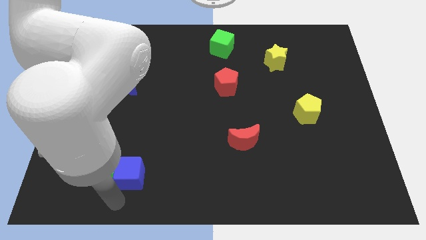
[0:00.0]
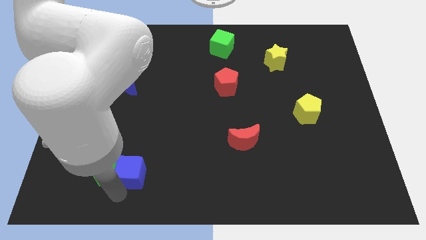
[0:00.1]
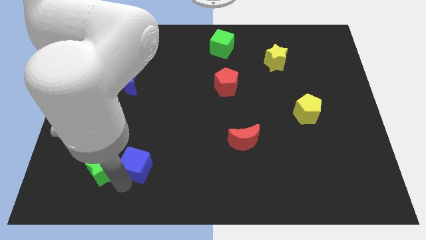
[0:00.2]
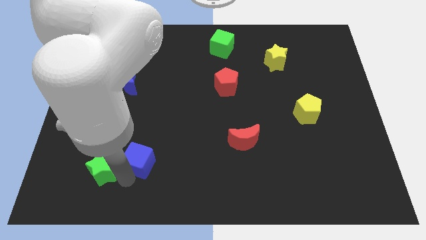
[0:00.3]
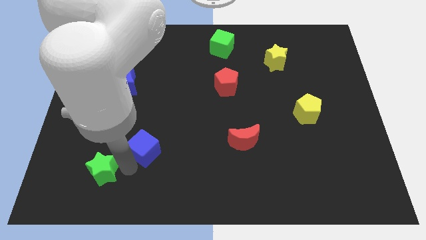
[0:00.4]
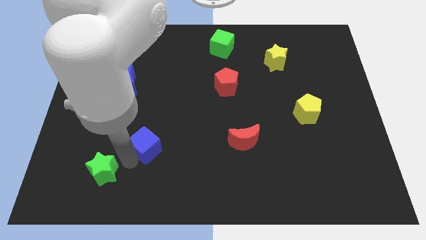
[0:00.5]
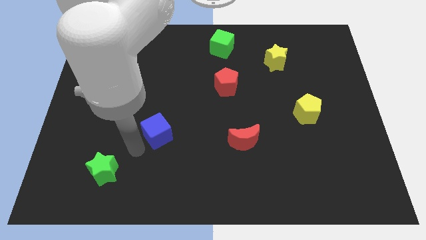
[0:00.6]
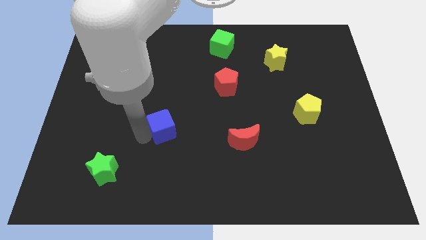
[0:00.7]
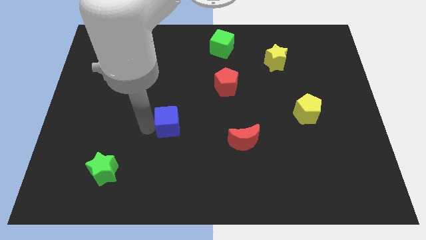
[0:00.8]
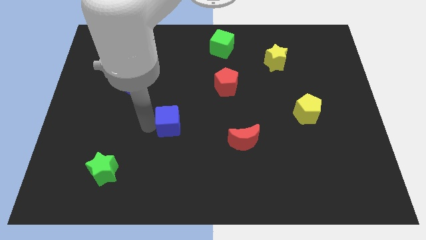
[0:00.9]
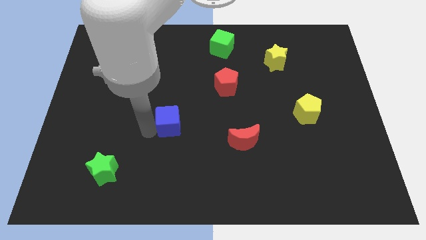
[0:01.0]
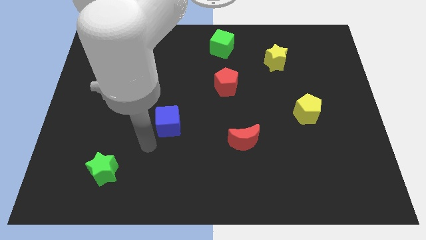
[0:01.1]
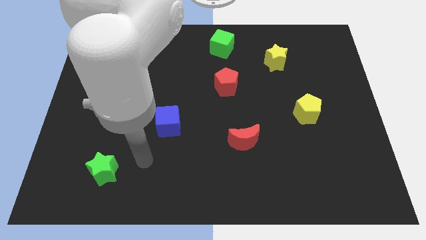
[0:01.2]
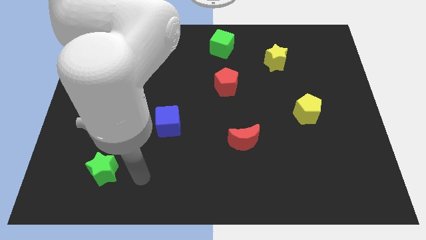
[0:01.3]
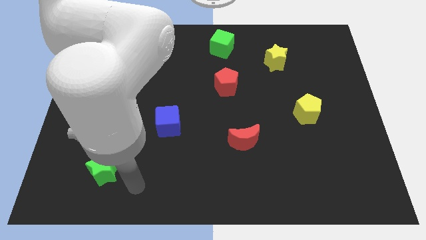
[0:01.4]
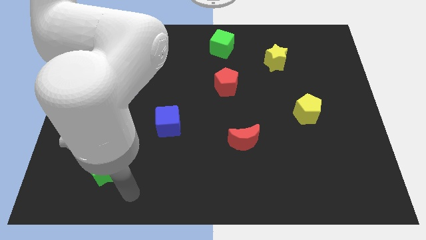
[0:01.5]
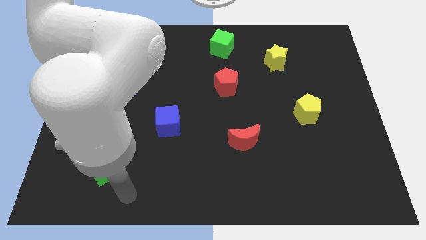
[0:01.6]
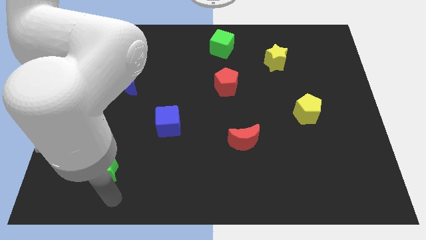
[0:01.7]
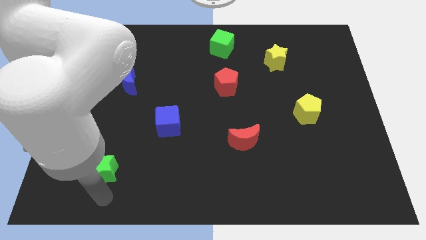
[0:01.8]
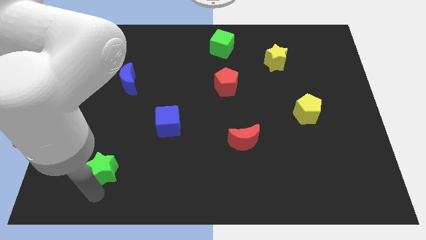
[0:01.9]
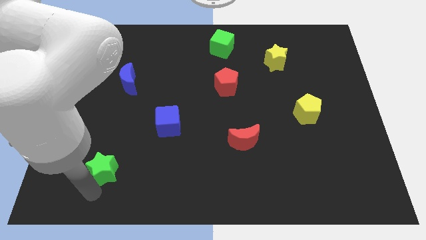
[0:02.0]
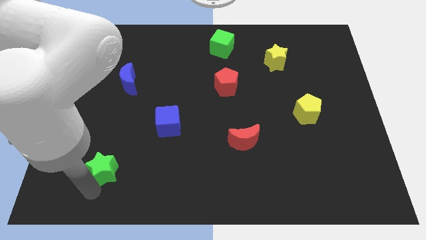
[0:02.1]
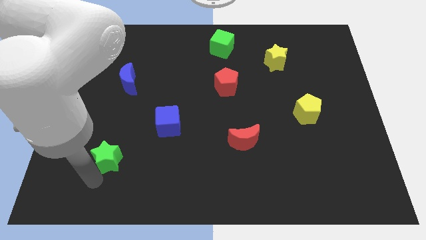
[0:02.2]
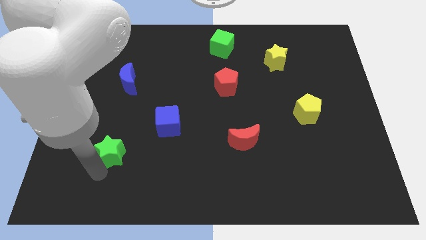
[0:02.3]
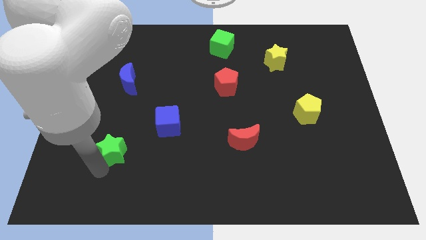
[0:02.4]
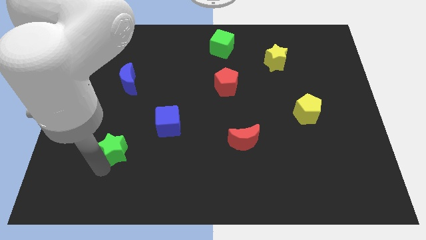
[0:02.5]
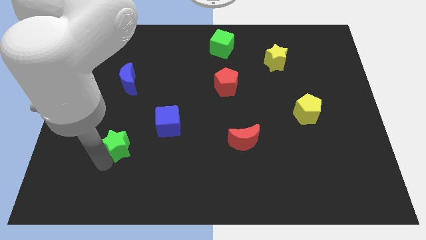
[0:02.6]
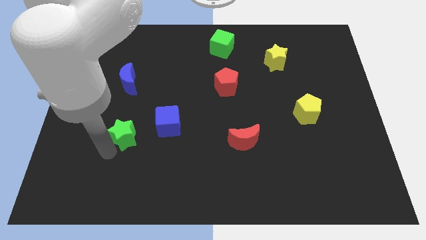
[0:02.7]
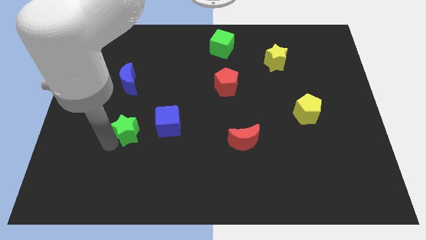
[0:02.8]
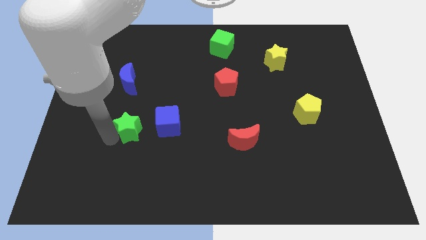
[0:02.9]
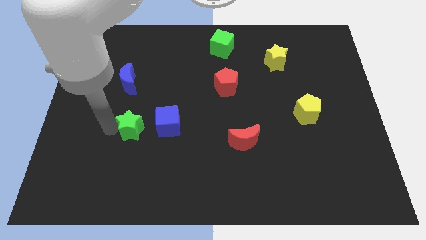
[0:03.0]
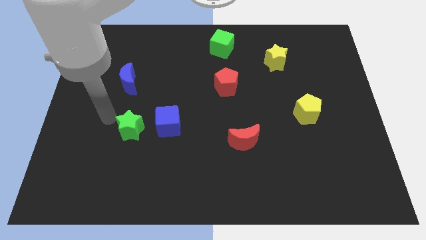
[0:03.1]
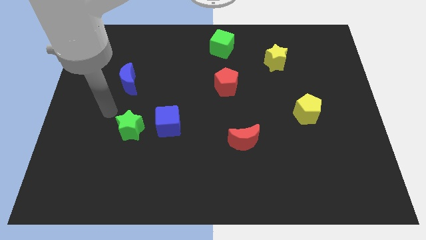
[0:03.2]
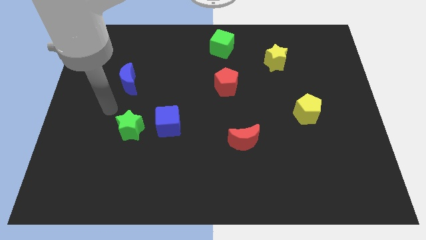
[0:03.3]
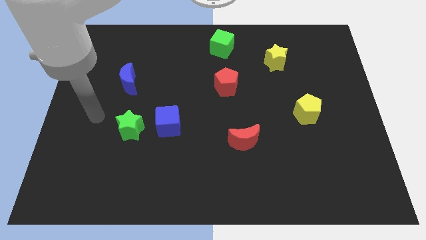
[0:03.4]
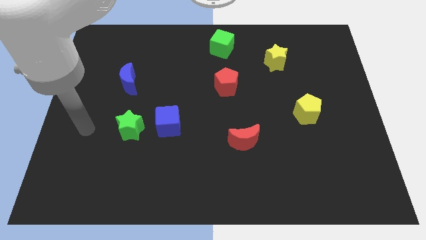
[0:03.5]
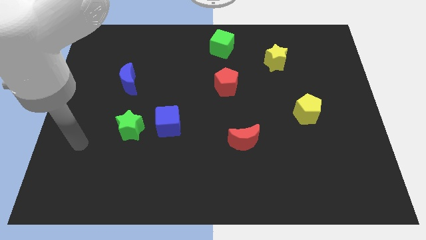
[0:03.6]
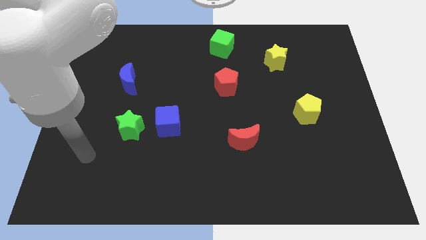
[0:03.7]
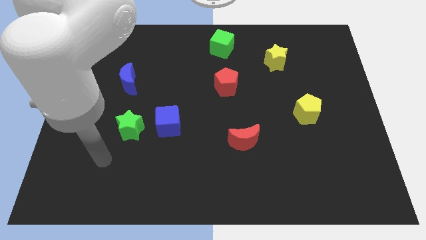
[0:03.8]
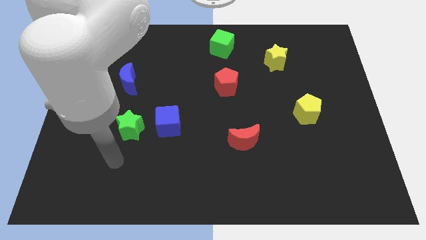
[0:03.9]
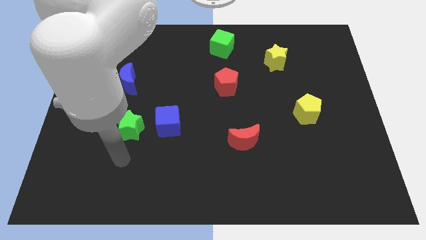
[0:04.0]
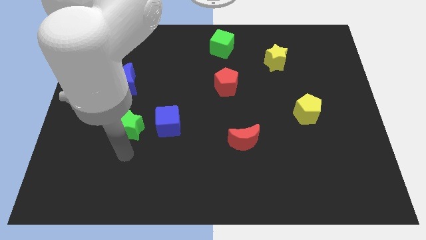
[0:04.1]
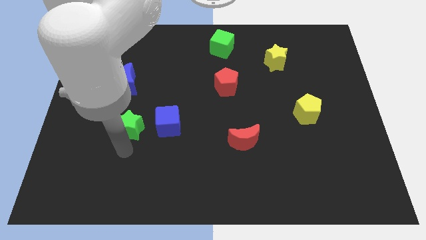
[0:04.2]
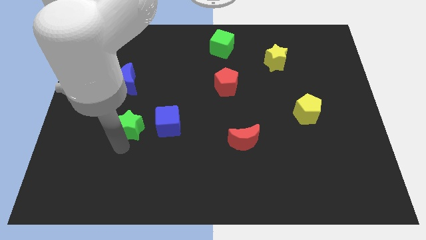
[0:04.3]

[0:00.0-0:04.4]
place green star and blue cube adjacent to each other

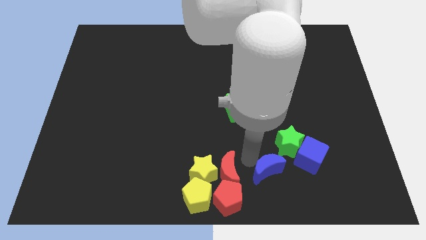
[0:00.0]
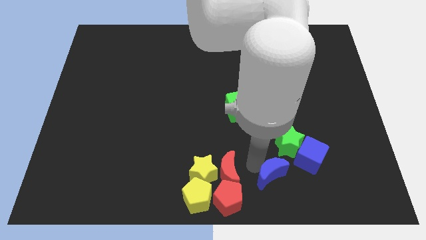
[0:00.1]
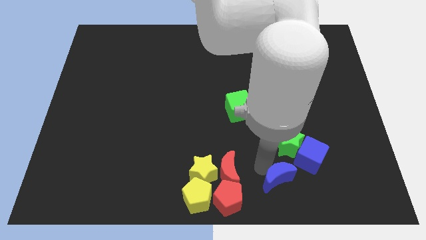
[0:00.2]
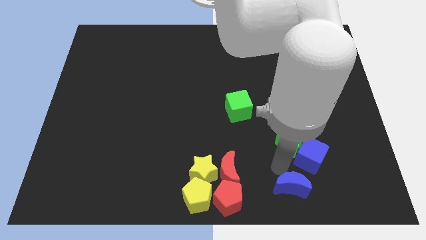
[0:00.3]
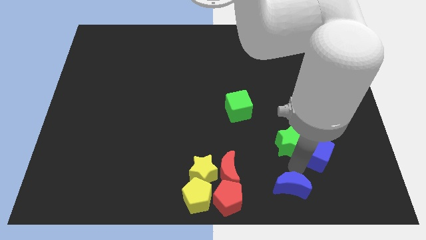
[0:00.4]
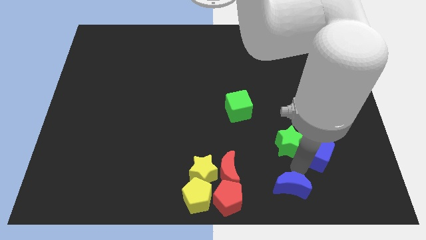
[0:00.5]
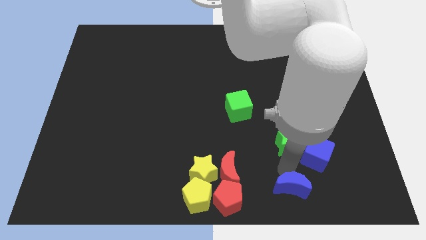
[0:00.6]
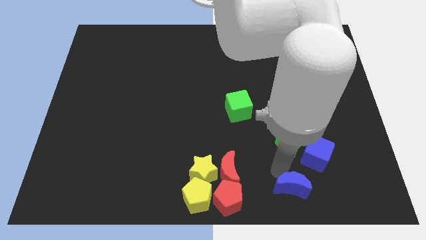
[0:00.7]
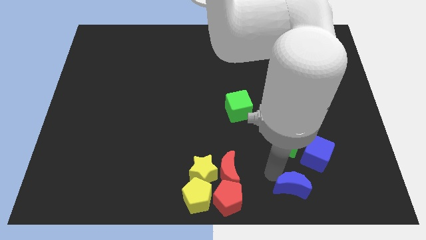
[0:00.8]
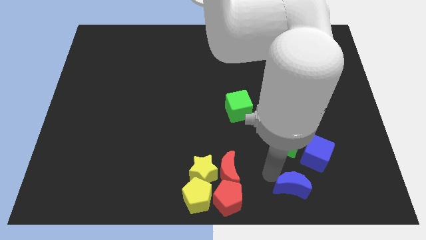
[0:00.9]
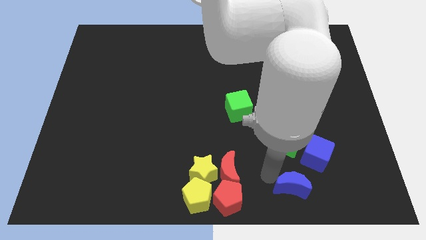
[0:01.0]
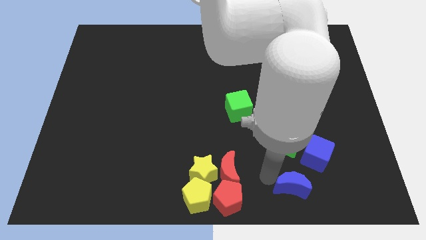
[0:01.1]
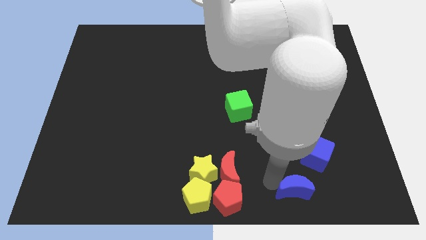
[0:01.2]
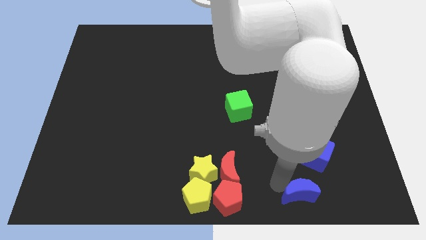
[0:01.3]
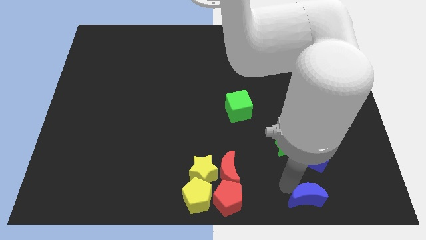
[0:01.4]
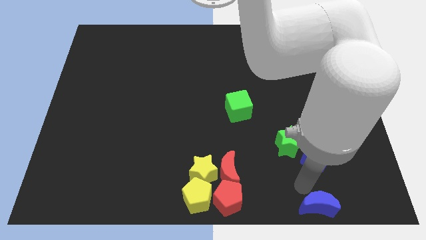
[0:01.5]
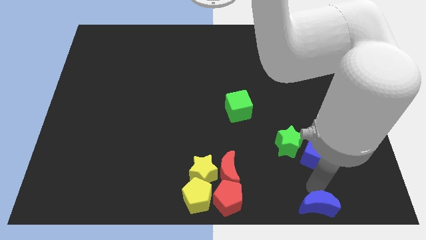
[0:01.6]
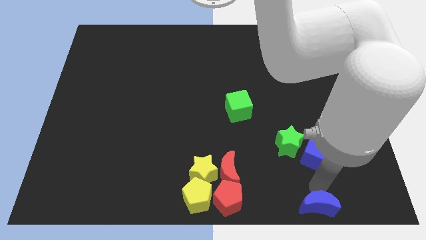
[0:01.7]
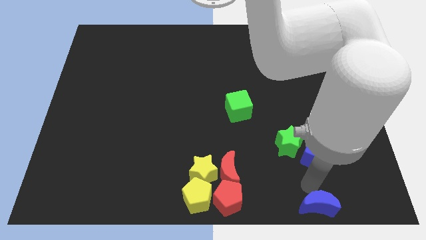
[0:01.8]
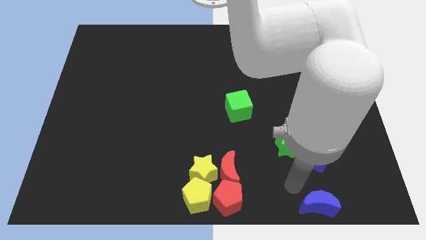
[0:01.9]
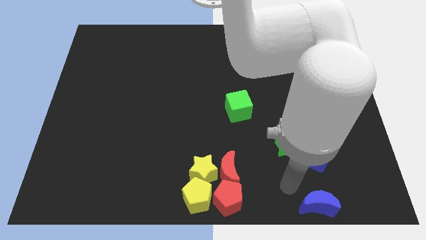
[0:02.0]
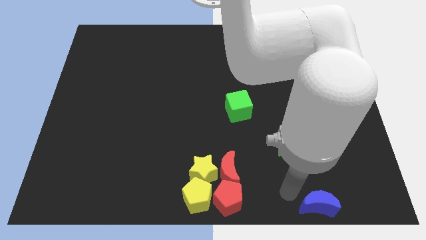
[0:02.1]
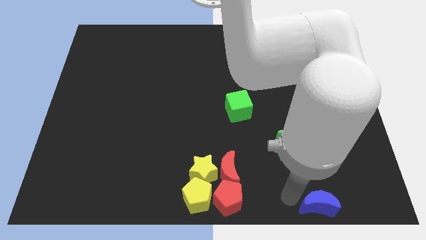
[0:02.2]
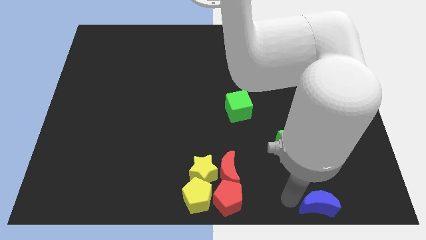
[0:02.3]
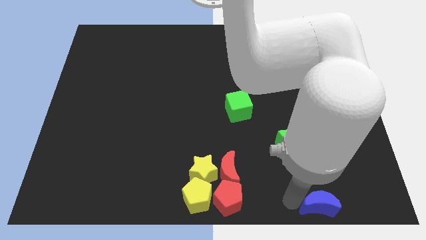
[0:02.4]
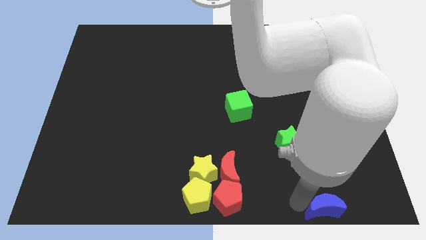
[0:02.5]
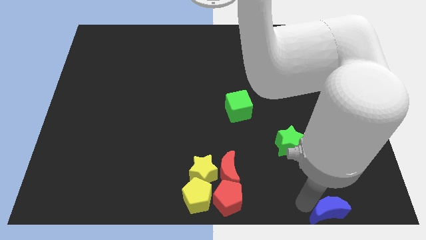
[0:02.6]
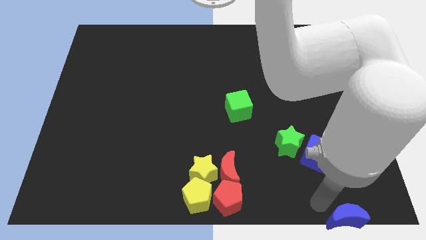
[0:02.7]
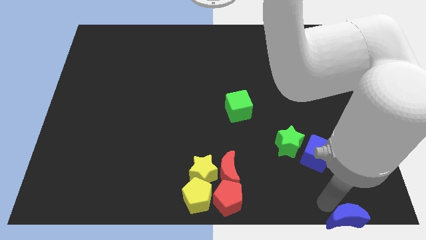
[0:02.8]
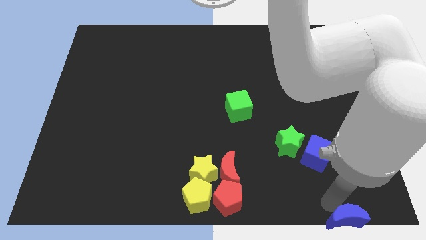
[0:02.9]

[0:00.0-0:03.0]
push blue moon to the bottom

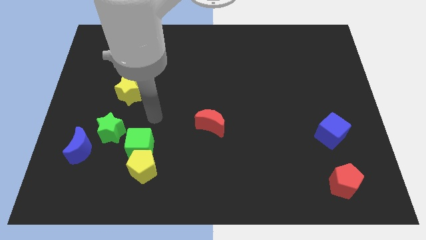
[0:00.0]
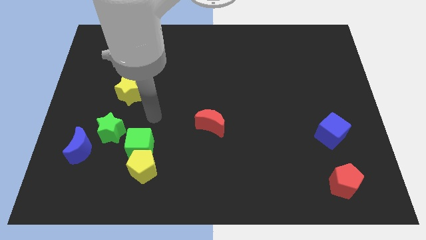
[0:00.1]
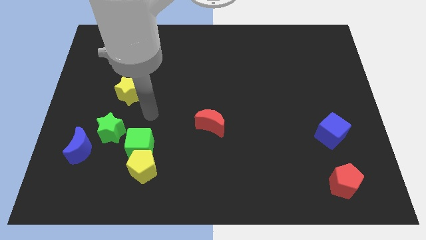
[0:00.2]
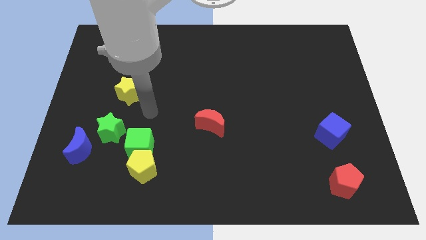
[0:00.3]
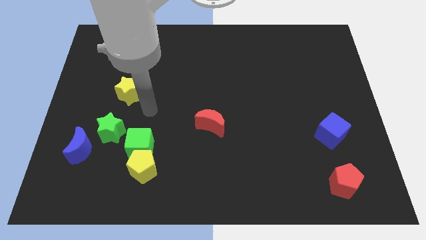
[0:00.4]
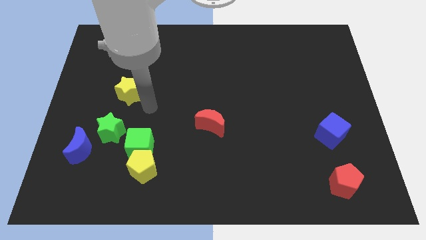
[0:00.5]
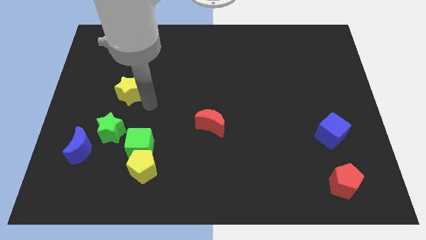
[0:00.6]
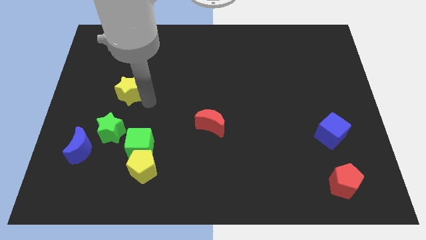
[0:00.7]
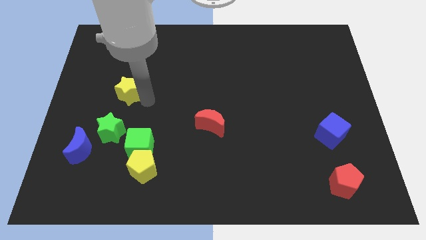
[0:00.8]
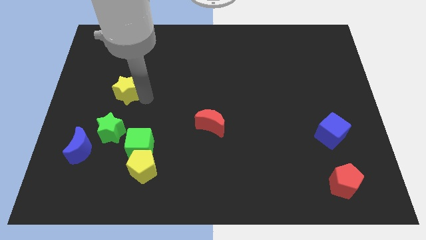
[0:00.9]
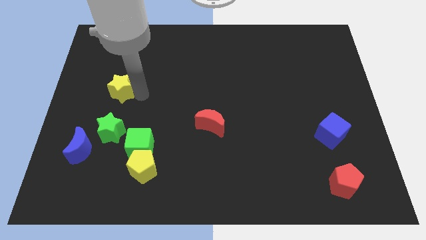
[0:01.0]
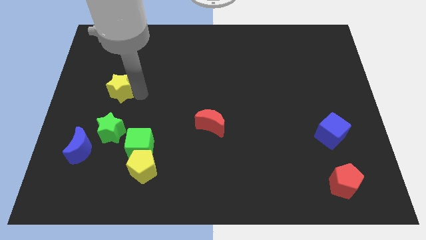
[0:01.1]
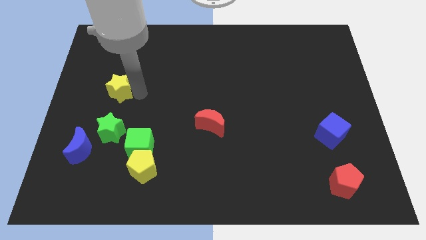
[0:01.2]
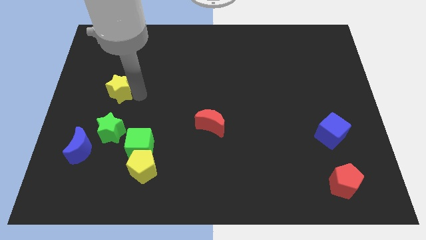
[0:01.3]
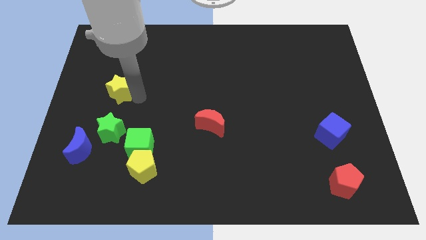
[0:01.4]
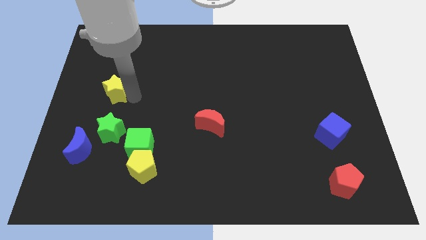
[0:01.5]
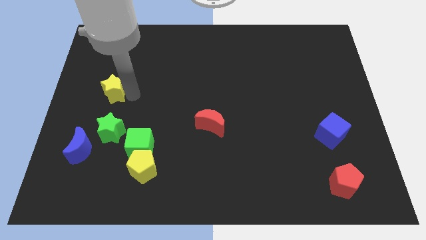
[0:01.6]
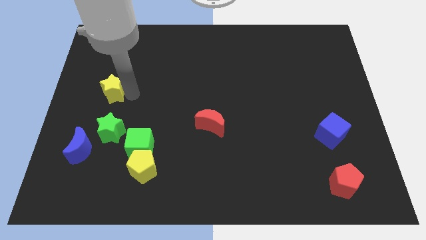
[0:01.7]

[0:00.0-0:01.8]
move the yellow star to the top of the green star
